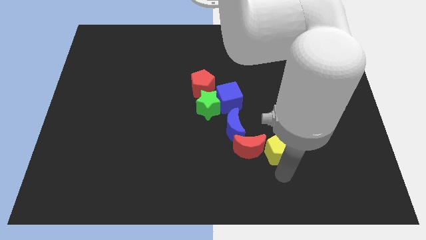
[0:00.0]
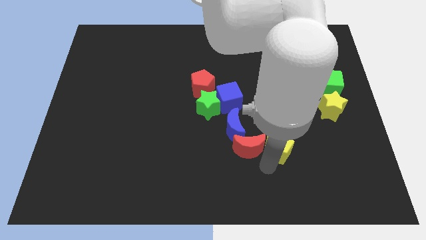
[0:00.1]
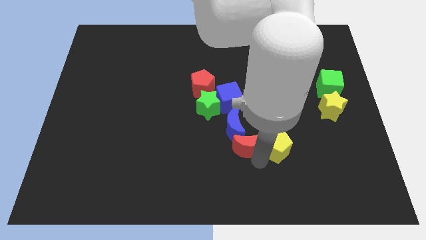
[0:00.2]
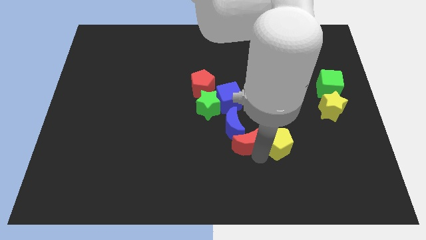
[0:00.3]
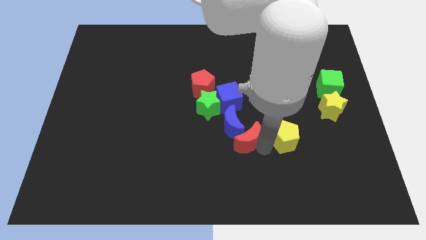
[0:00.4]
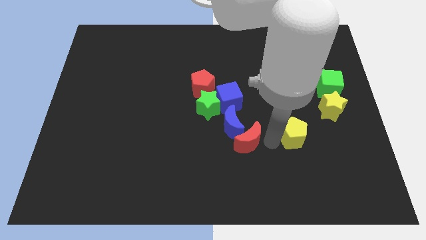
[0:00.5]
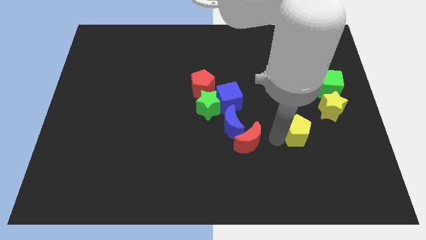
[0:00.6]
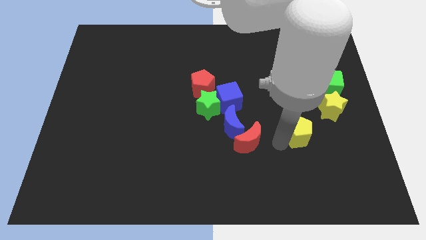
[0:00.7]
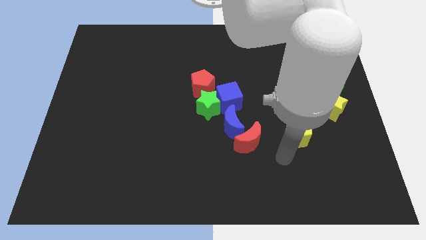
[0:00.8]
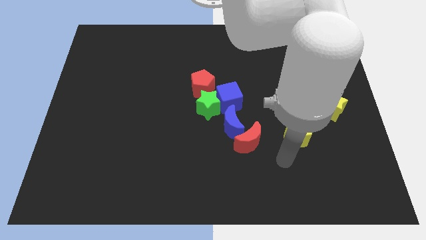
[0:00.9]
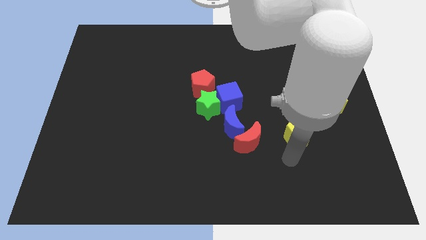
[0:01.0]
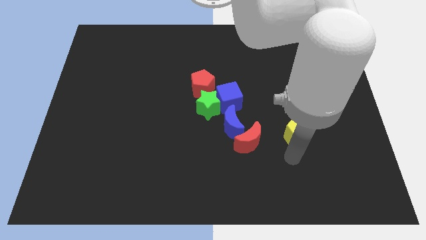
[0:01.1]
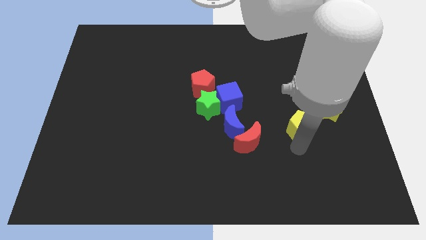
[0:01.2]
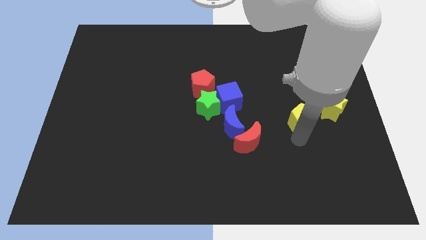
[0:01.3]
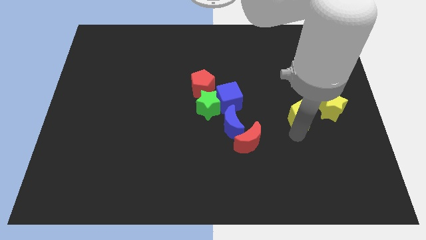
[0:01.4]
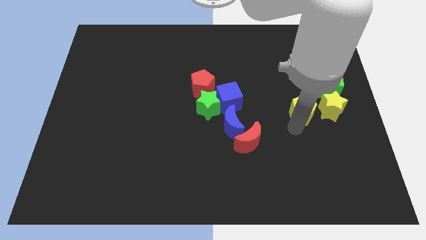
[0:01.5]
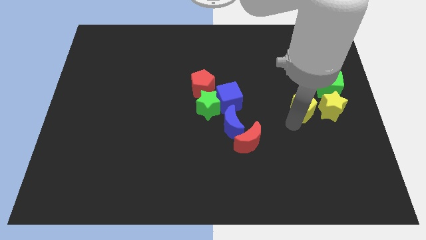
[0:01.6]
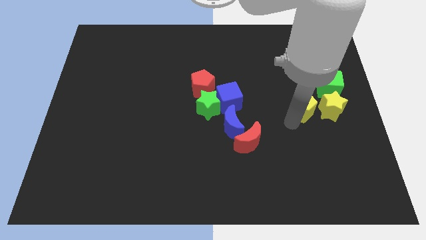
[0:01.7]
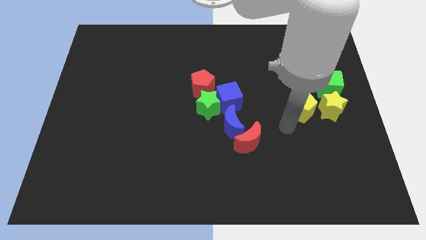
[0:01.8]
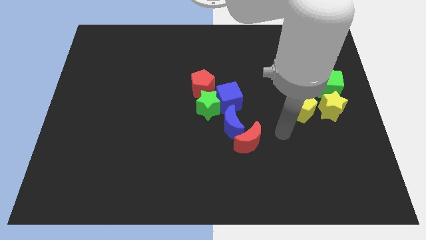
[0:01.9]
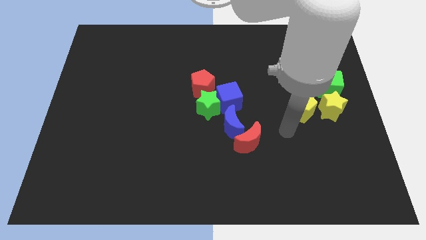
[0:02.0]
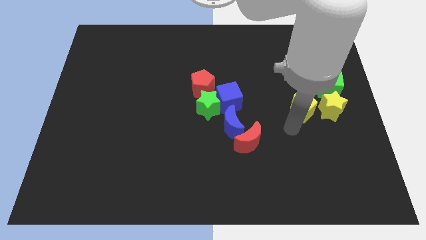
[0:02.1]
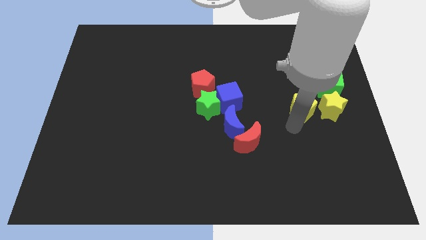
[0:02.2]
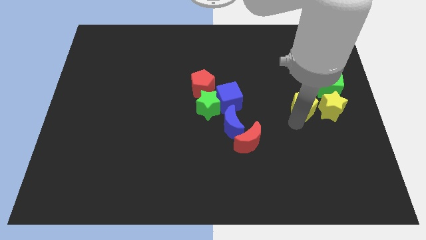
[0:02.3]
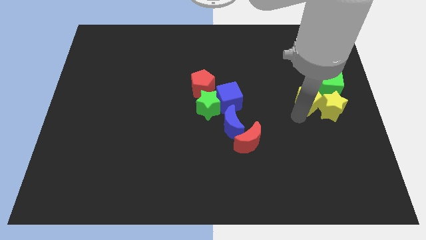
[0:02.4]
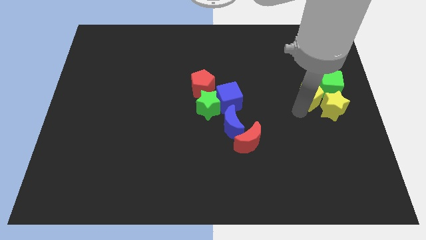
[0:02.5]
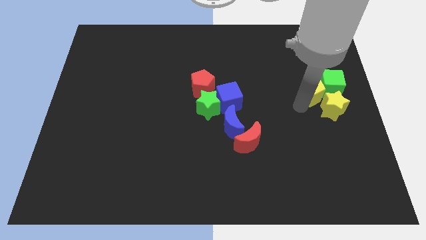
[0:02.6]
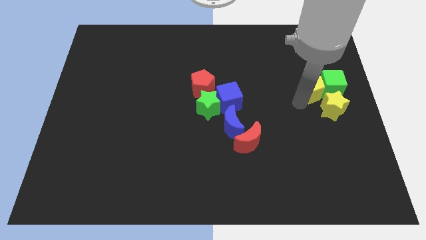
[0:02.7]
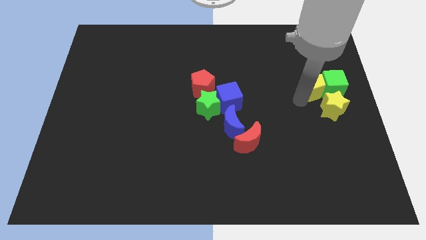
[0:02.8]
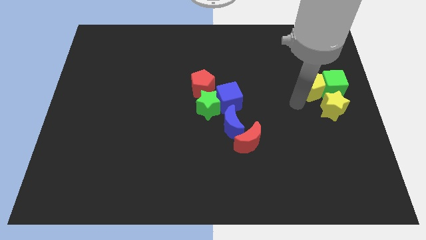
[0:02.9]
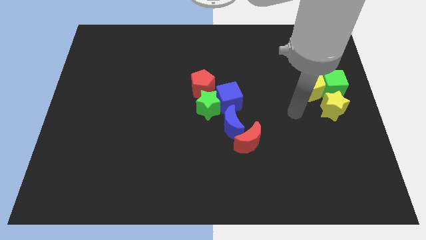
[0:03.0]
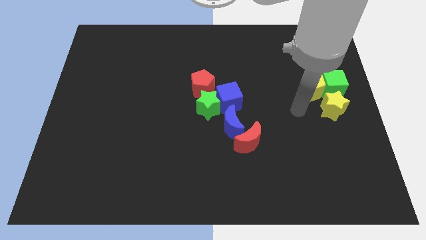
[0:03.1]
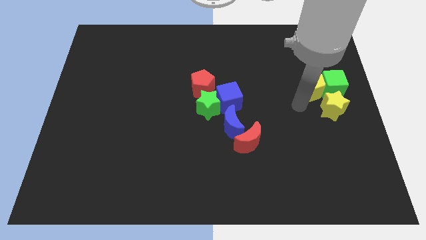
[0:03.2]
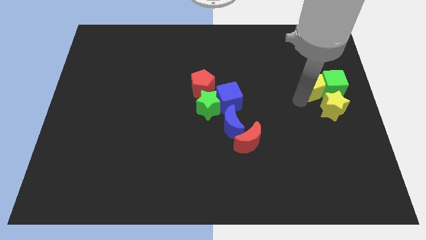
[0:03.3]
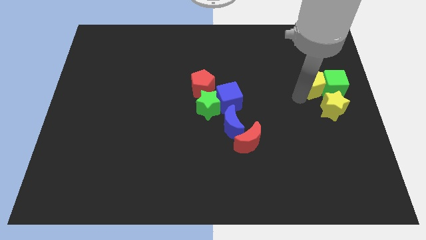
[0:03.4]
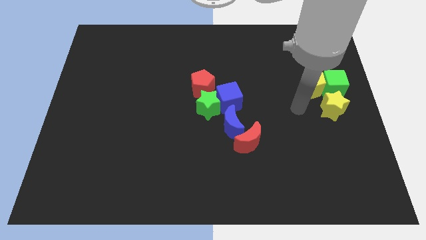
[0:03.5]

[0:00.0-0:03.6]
place the yellow pentagon to the left of the green cube

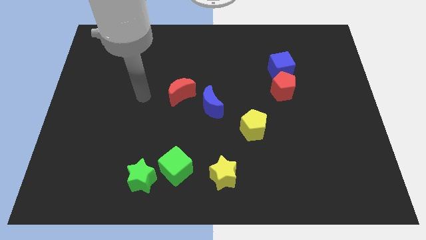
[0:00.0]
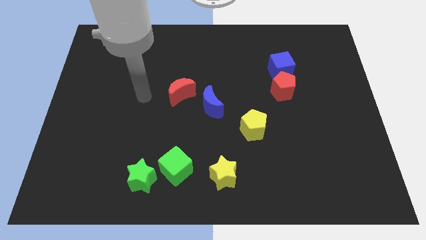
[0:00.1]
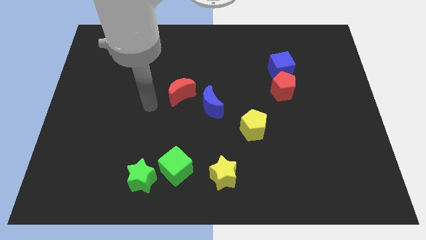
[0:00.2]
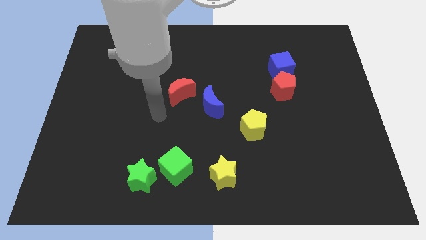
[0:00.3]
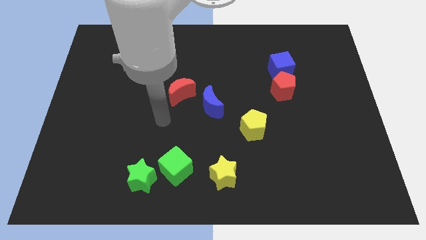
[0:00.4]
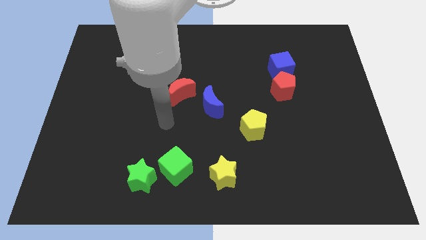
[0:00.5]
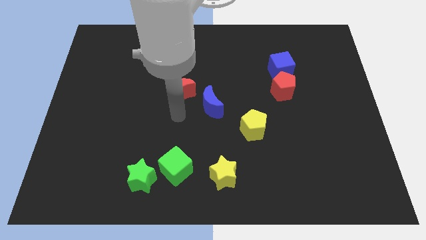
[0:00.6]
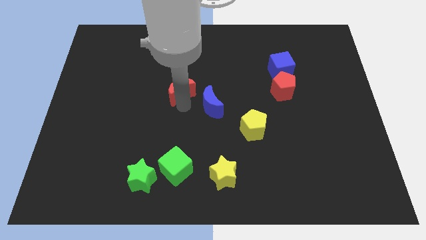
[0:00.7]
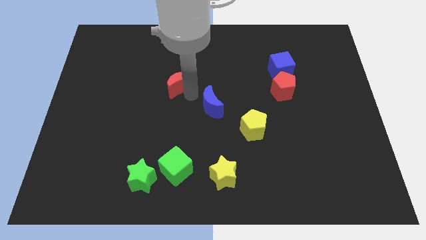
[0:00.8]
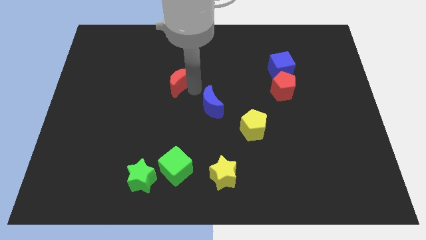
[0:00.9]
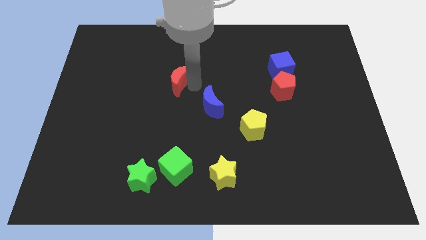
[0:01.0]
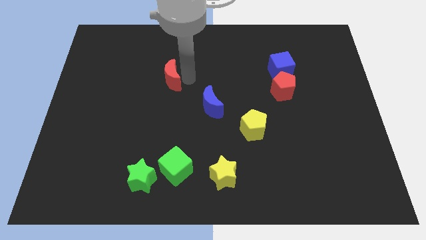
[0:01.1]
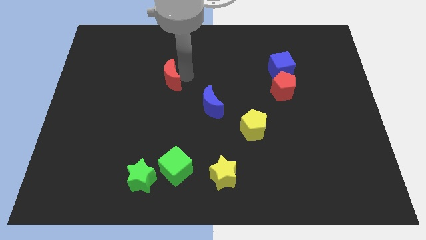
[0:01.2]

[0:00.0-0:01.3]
move the red moon slightly towards the left

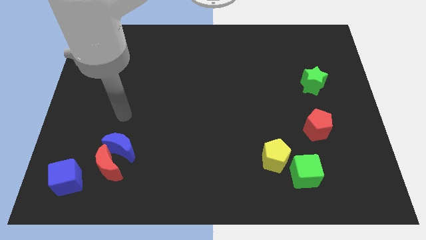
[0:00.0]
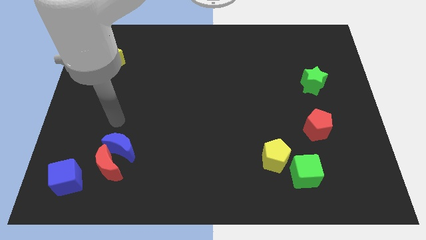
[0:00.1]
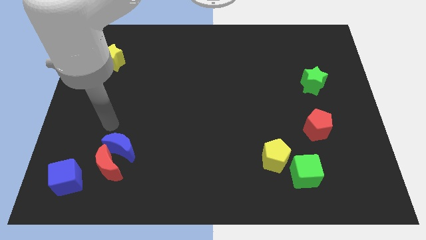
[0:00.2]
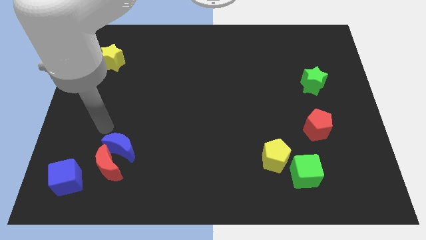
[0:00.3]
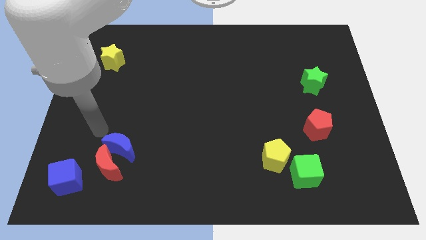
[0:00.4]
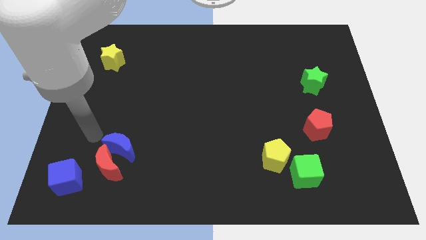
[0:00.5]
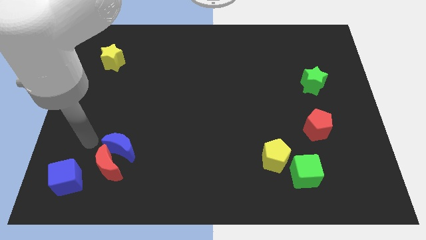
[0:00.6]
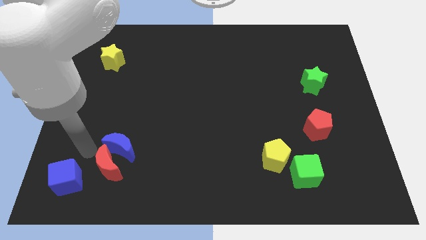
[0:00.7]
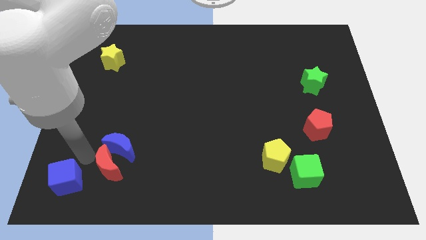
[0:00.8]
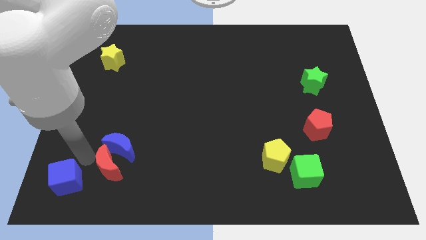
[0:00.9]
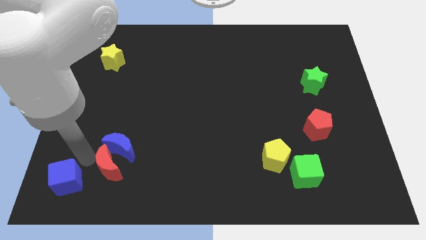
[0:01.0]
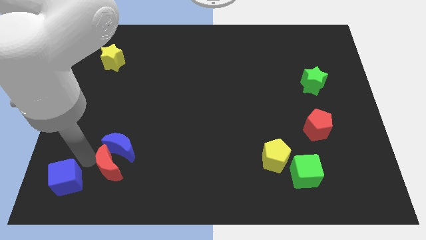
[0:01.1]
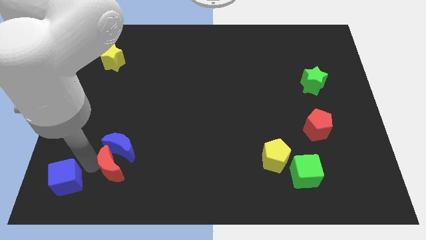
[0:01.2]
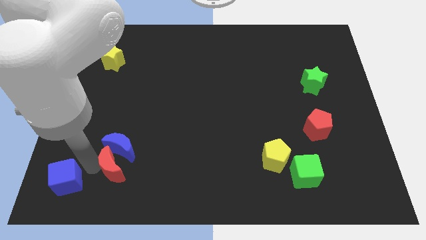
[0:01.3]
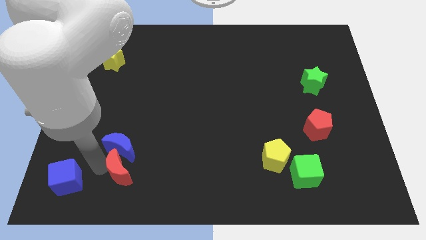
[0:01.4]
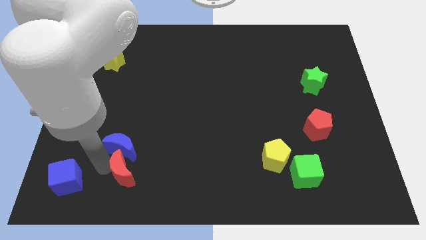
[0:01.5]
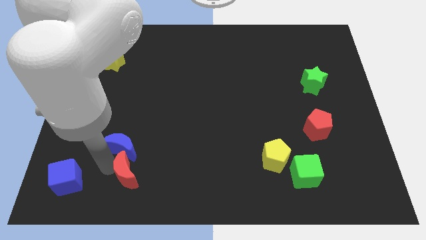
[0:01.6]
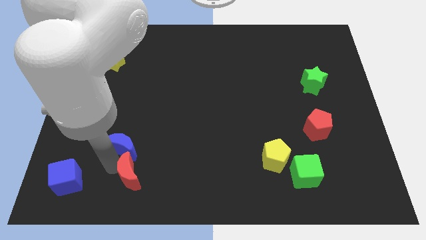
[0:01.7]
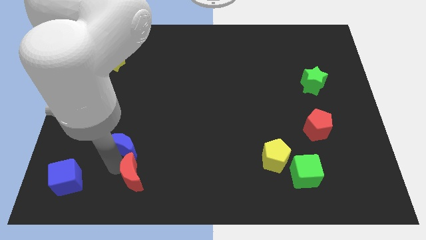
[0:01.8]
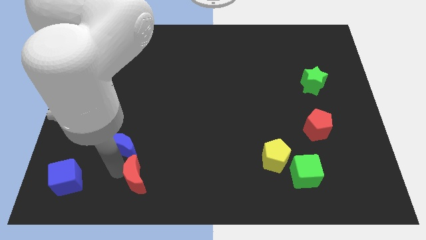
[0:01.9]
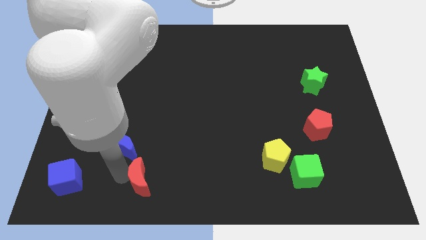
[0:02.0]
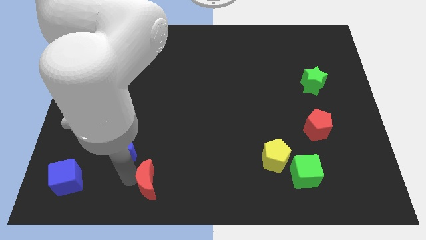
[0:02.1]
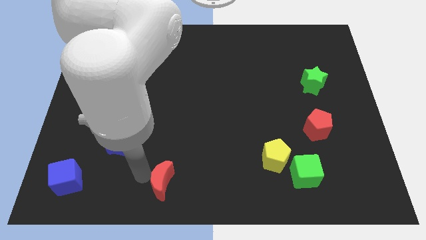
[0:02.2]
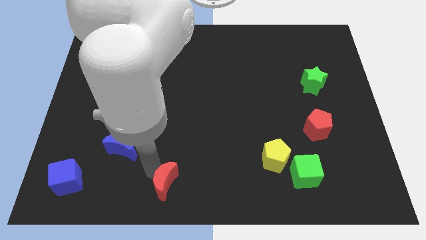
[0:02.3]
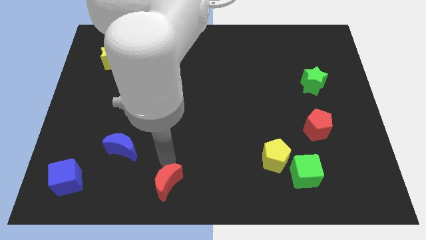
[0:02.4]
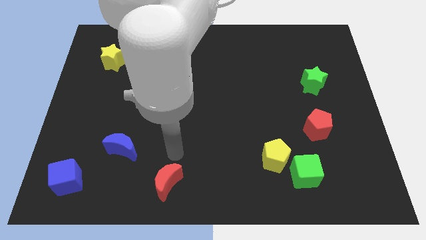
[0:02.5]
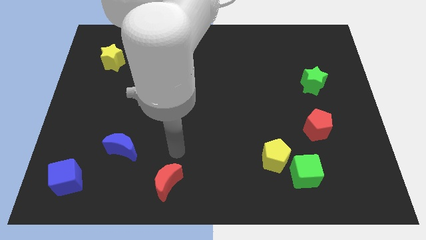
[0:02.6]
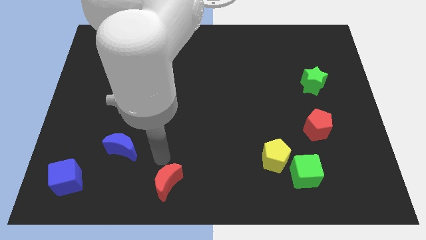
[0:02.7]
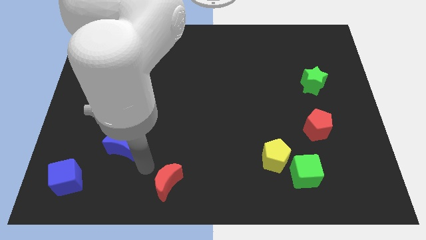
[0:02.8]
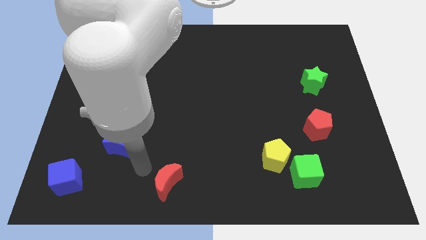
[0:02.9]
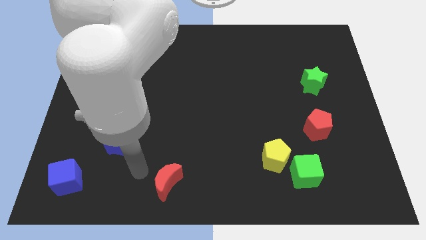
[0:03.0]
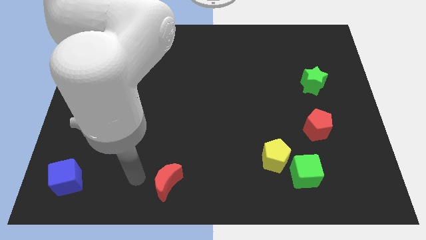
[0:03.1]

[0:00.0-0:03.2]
move the red crescent towards the right side

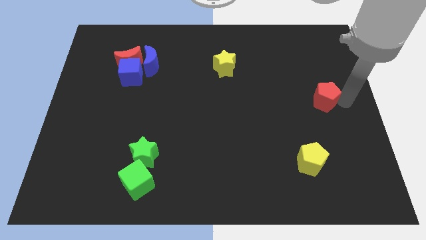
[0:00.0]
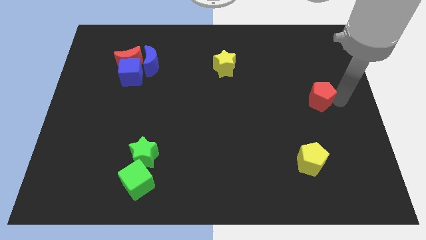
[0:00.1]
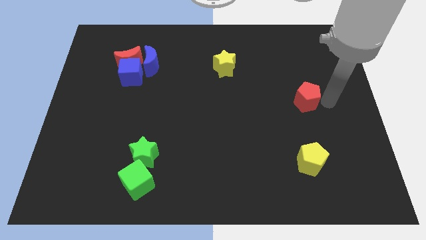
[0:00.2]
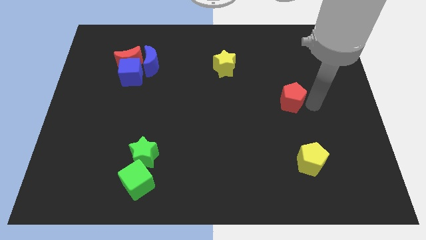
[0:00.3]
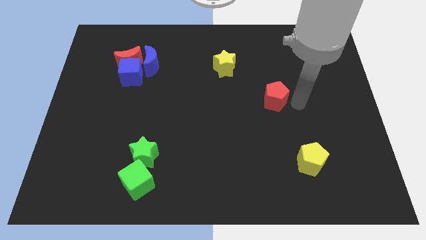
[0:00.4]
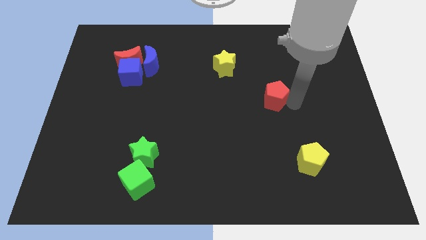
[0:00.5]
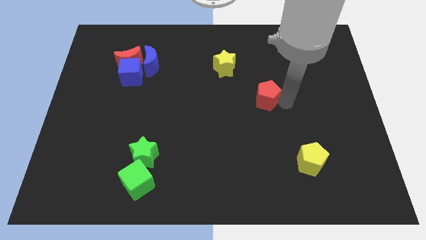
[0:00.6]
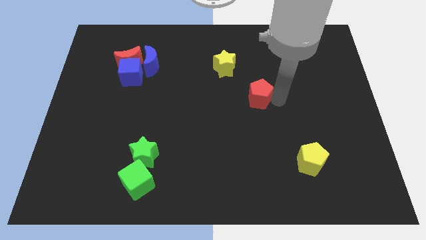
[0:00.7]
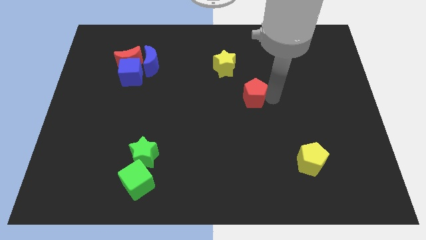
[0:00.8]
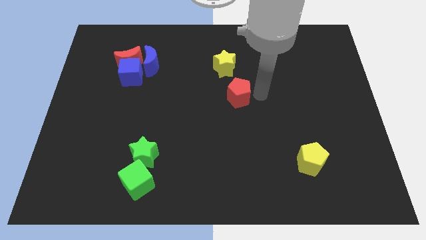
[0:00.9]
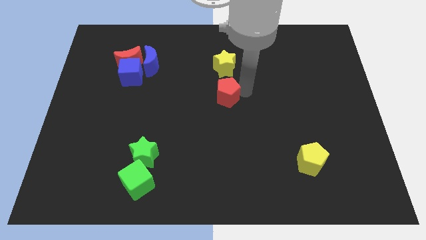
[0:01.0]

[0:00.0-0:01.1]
place red pentagon to the bottom of the yellow star
